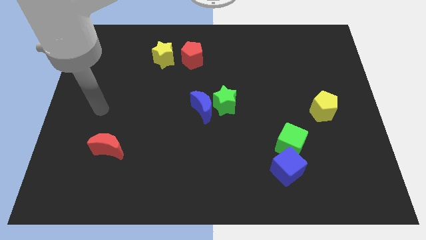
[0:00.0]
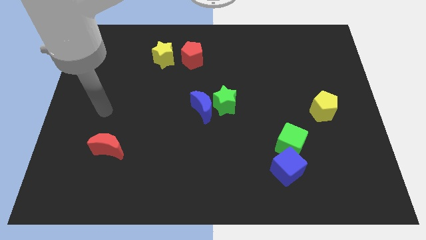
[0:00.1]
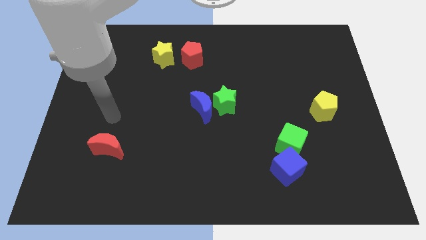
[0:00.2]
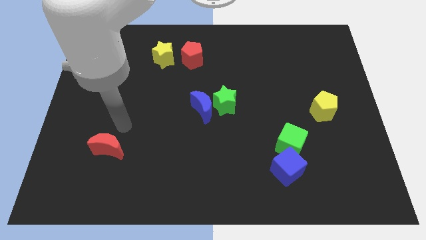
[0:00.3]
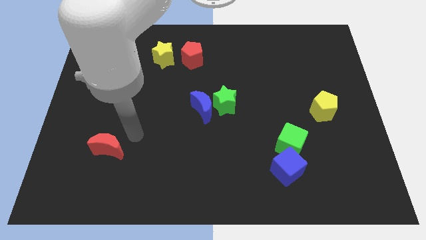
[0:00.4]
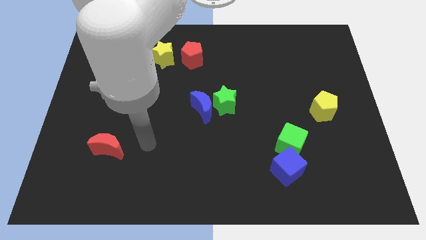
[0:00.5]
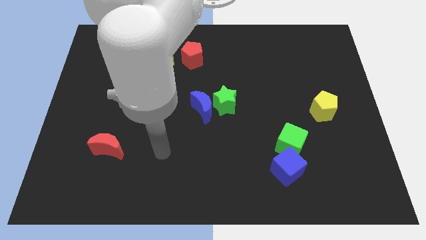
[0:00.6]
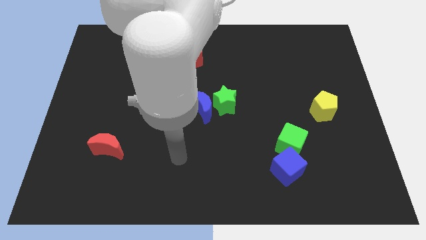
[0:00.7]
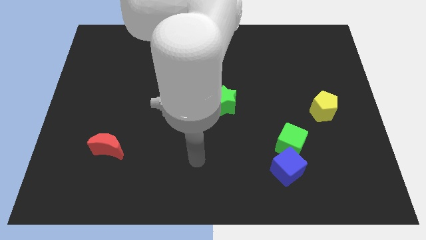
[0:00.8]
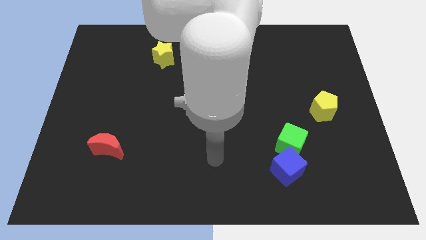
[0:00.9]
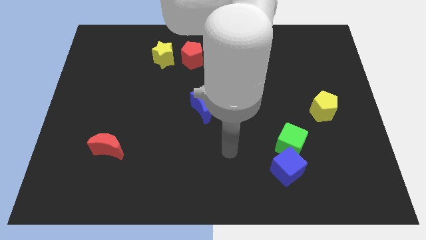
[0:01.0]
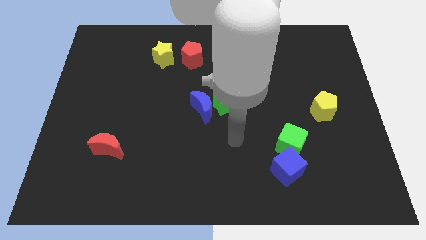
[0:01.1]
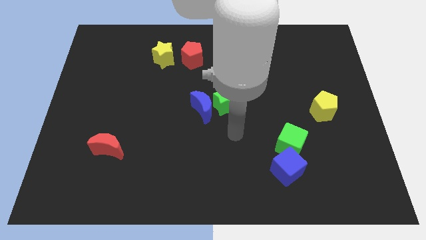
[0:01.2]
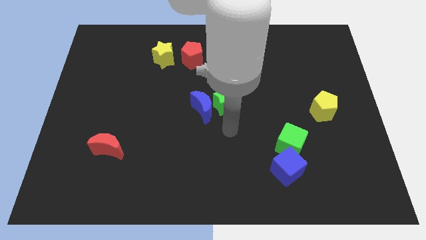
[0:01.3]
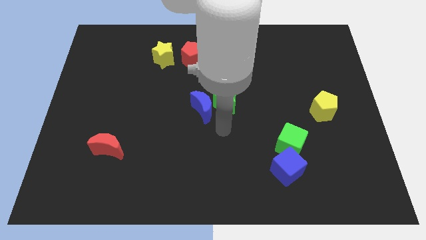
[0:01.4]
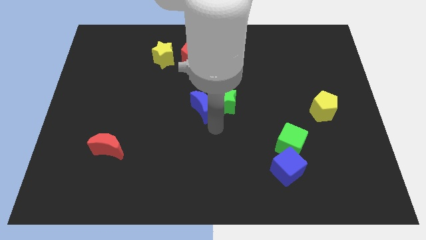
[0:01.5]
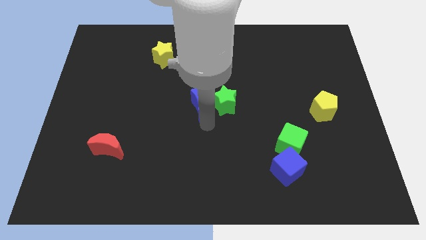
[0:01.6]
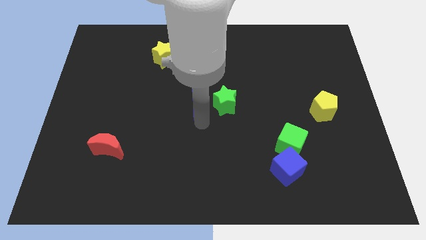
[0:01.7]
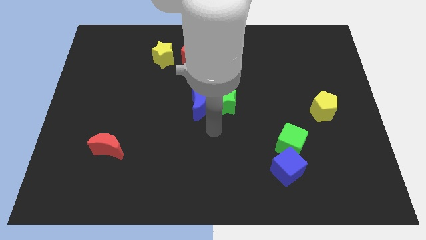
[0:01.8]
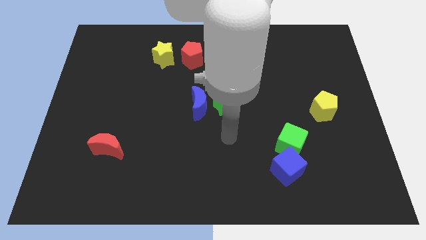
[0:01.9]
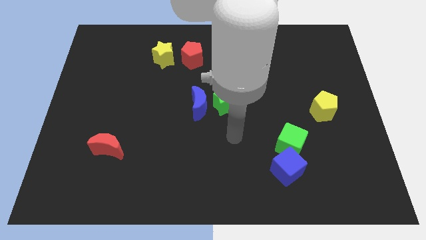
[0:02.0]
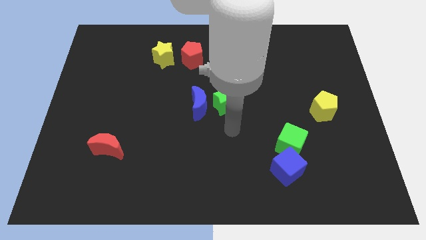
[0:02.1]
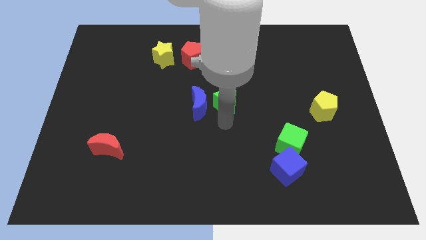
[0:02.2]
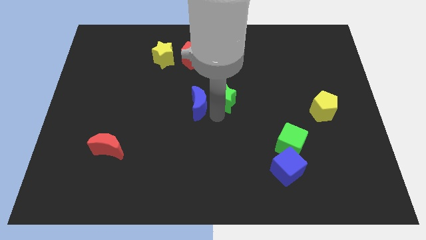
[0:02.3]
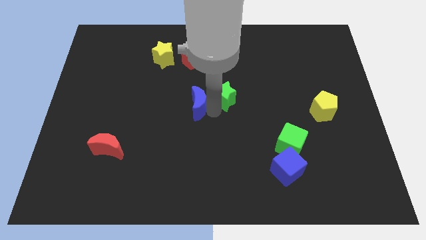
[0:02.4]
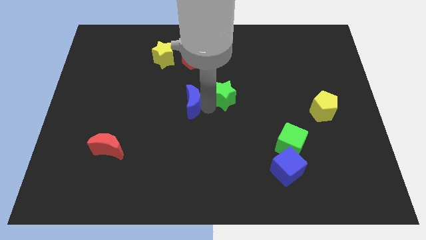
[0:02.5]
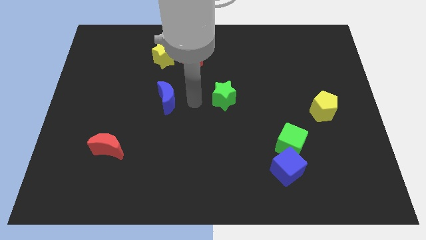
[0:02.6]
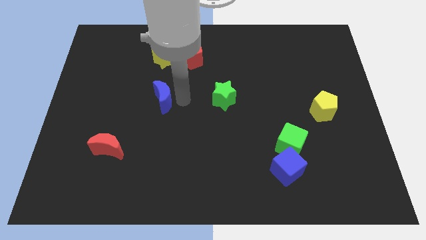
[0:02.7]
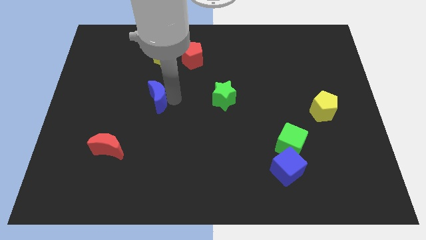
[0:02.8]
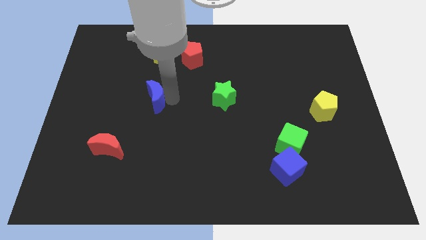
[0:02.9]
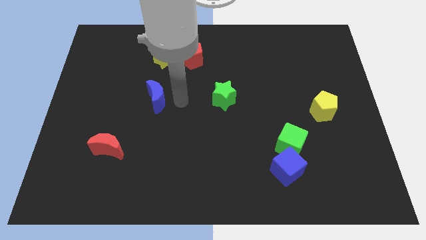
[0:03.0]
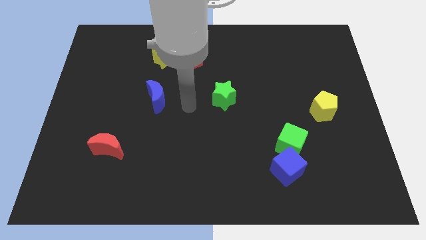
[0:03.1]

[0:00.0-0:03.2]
separate the blue crescent and the green star

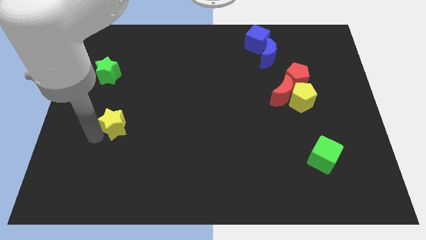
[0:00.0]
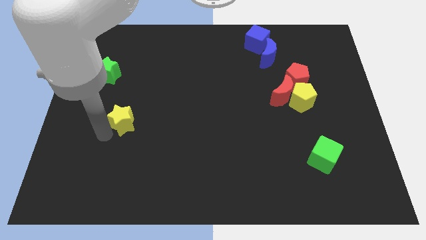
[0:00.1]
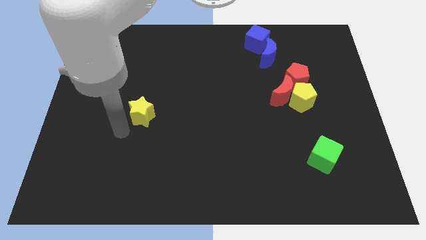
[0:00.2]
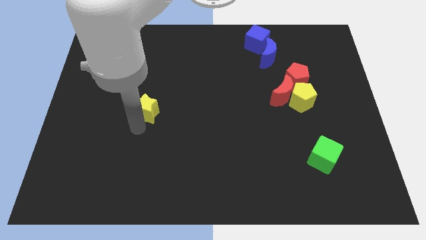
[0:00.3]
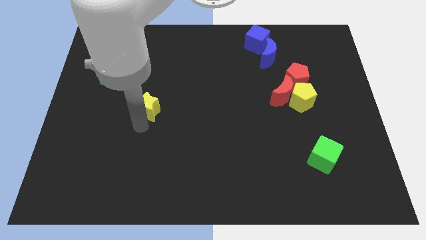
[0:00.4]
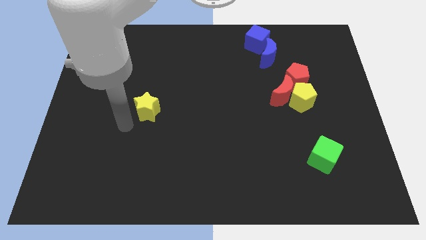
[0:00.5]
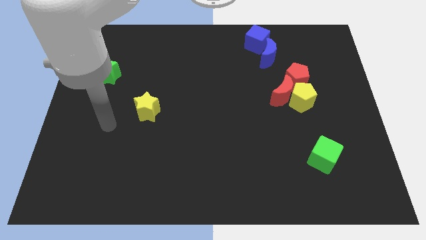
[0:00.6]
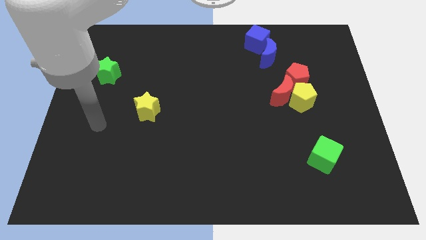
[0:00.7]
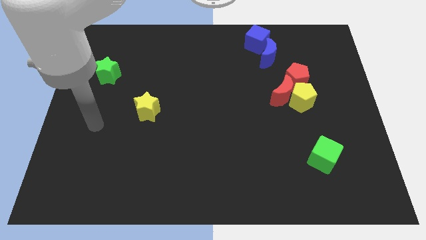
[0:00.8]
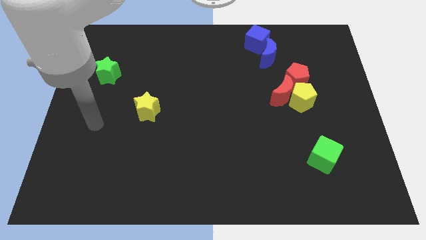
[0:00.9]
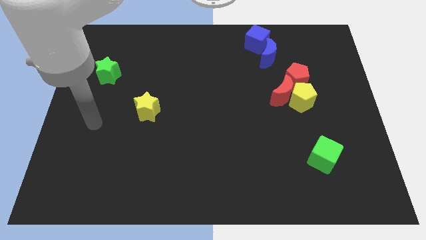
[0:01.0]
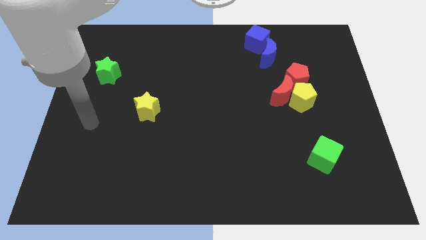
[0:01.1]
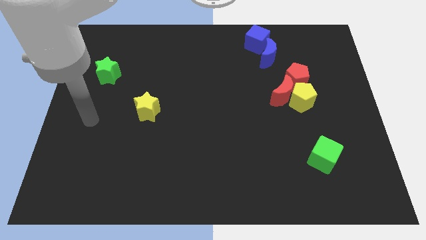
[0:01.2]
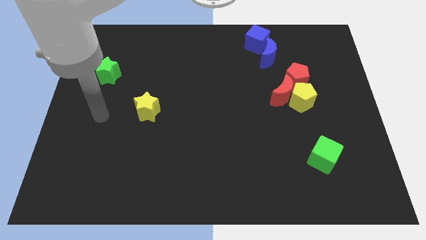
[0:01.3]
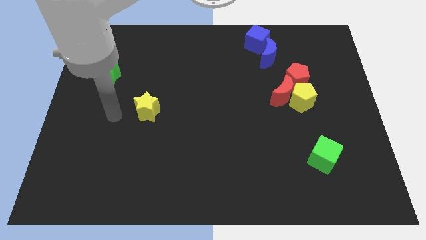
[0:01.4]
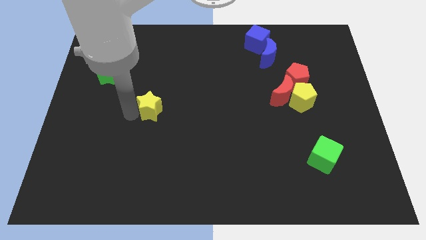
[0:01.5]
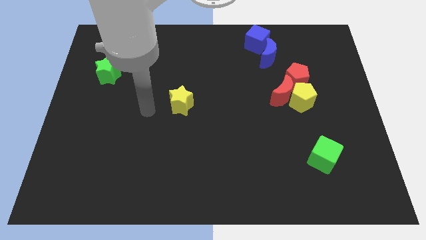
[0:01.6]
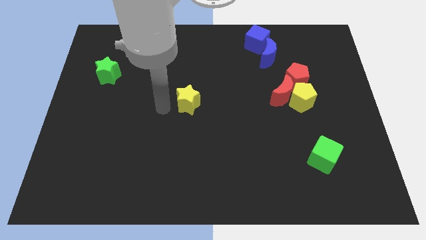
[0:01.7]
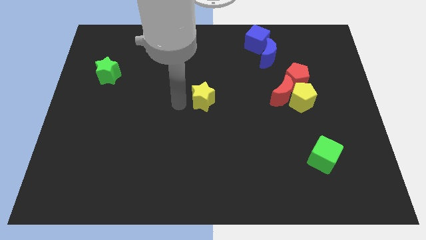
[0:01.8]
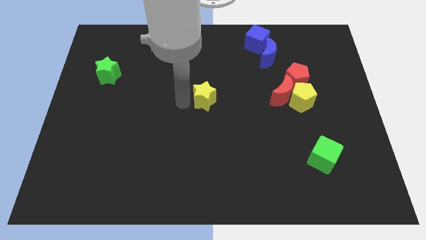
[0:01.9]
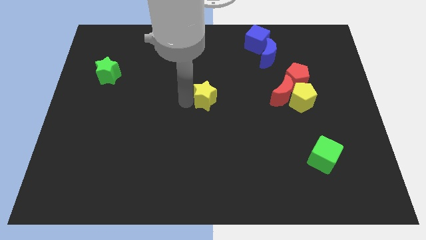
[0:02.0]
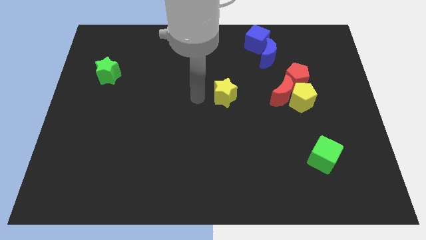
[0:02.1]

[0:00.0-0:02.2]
place the yellow star in center of the board

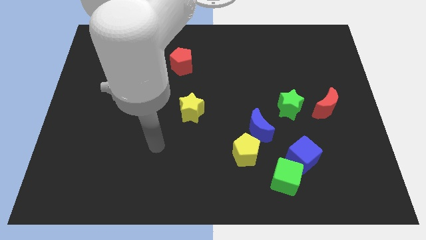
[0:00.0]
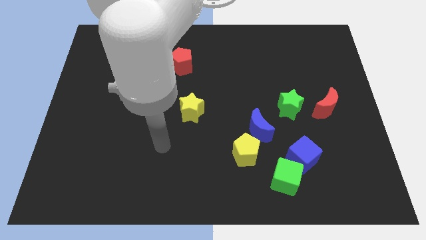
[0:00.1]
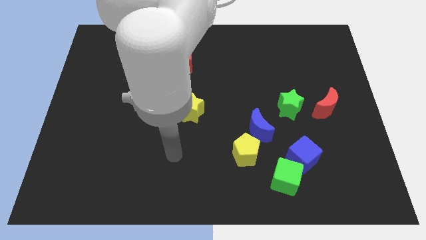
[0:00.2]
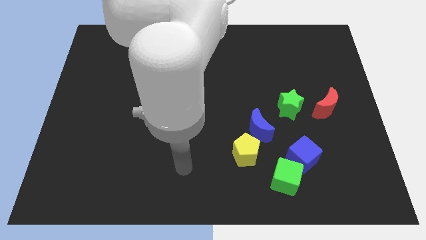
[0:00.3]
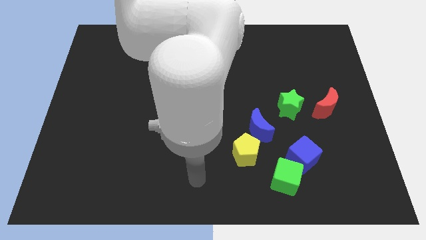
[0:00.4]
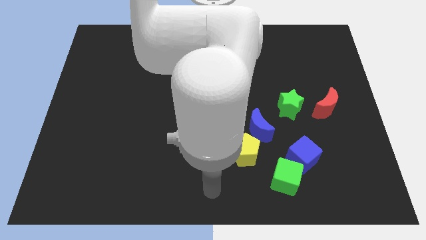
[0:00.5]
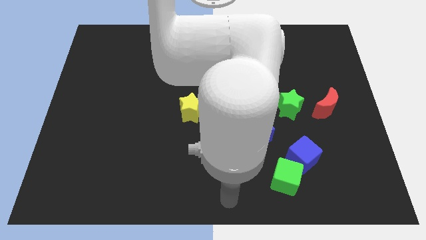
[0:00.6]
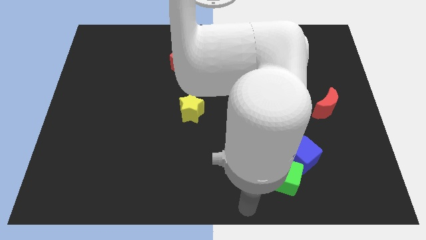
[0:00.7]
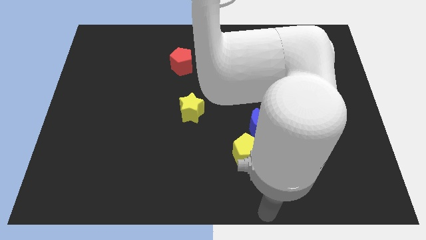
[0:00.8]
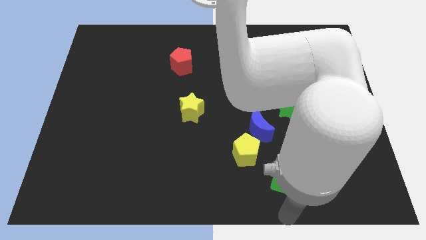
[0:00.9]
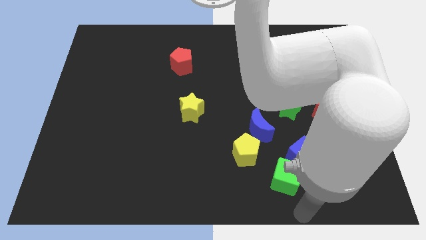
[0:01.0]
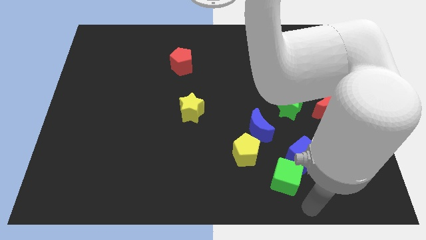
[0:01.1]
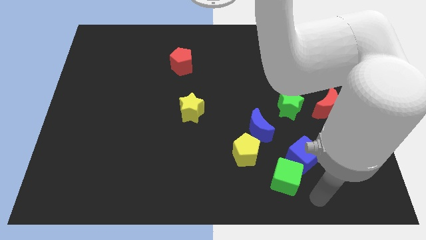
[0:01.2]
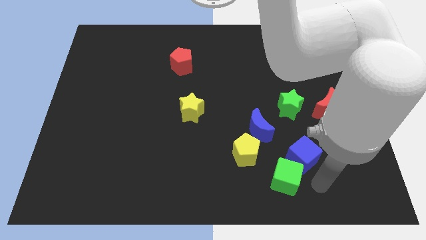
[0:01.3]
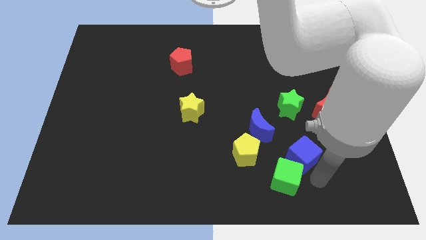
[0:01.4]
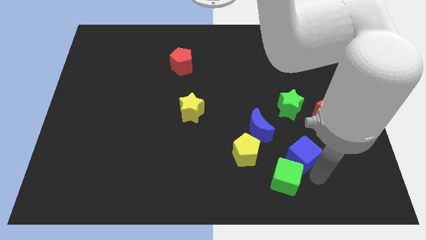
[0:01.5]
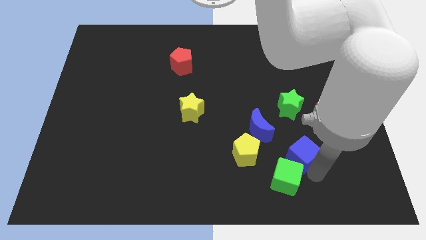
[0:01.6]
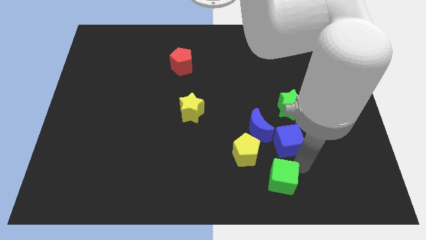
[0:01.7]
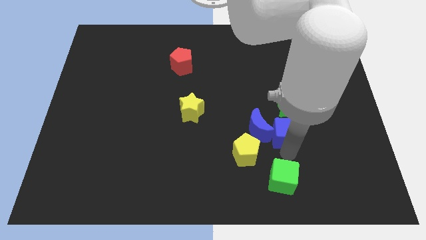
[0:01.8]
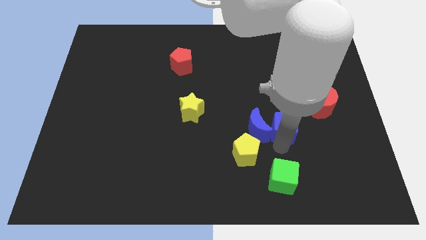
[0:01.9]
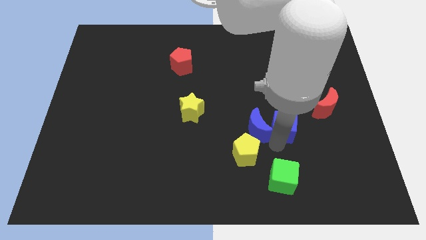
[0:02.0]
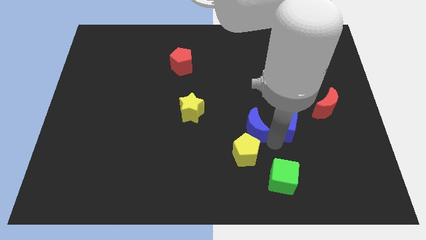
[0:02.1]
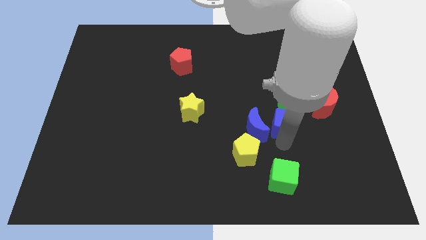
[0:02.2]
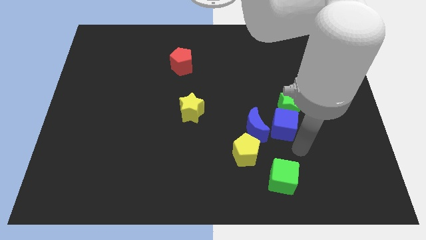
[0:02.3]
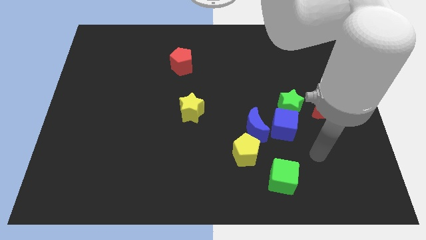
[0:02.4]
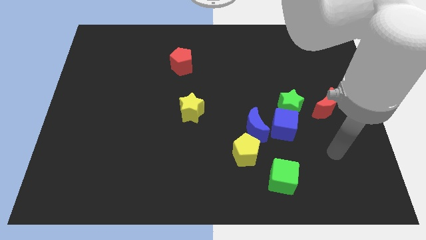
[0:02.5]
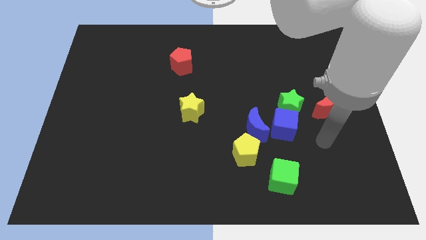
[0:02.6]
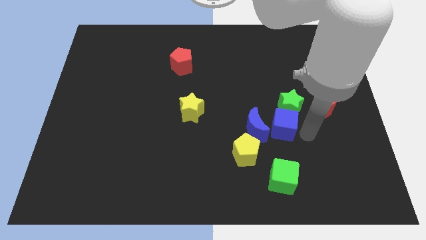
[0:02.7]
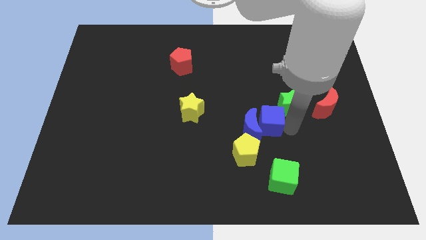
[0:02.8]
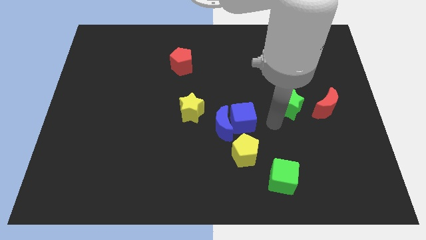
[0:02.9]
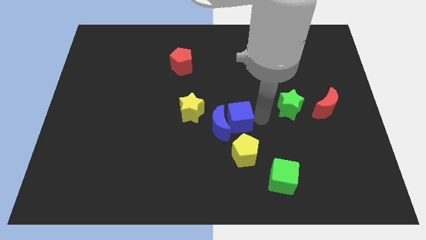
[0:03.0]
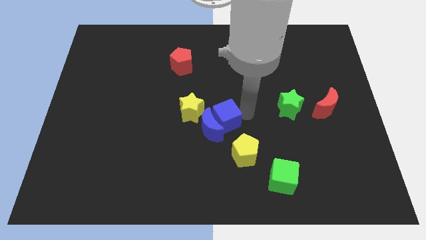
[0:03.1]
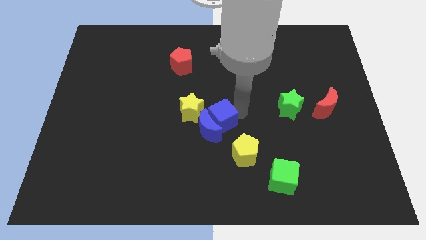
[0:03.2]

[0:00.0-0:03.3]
push the blue cube into the blue moon

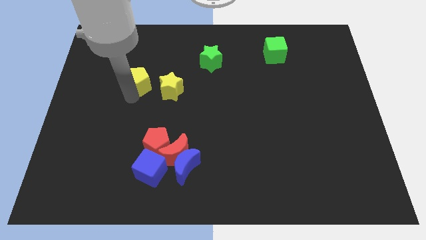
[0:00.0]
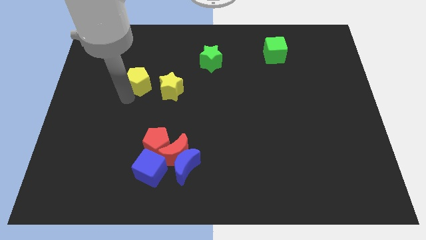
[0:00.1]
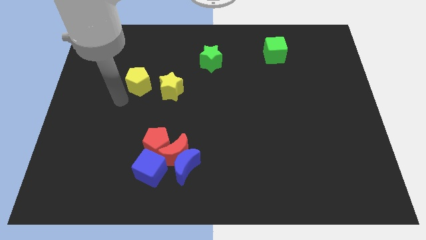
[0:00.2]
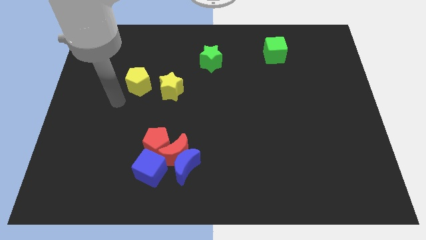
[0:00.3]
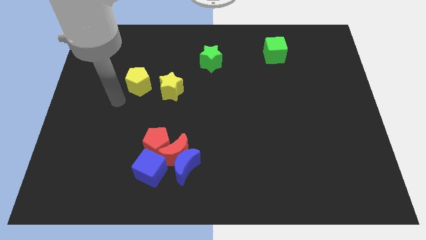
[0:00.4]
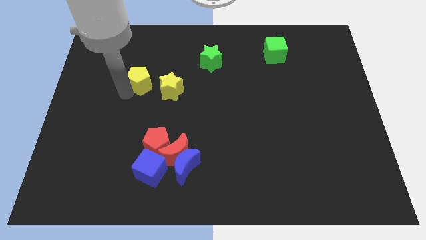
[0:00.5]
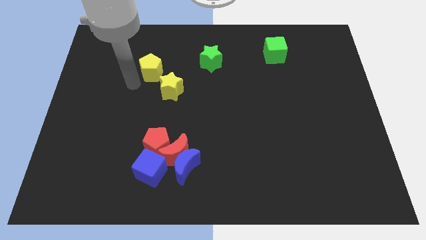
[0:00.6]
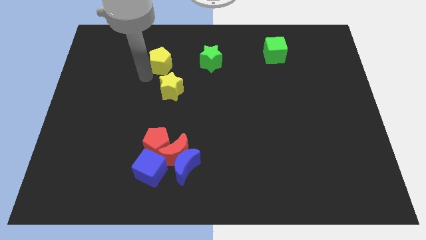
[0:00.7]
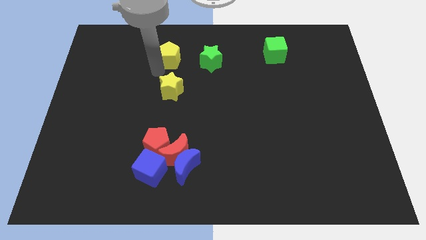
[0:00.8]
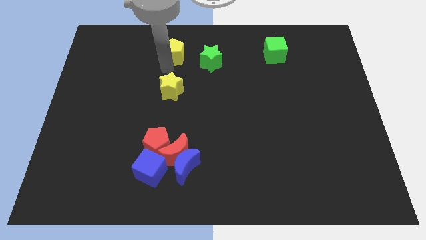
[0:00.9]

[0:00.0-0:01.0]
move the yellow pentagon above to the yellow star
